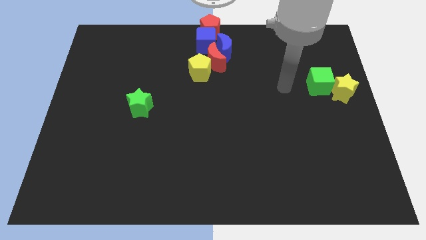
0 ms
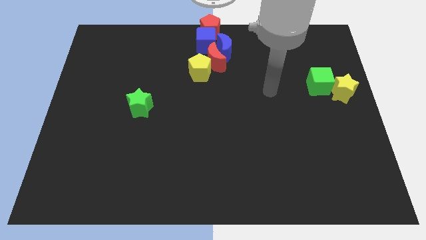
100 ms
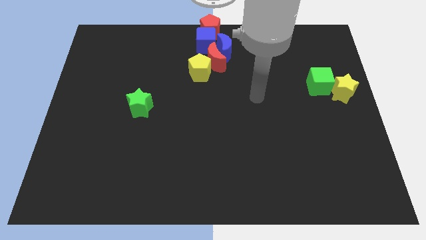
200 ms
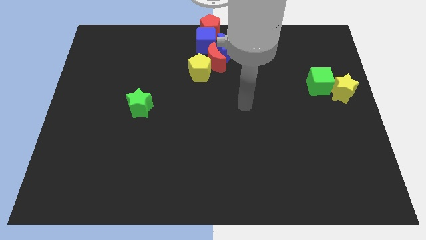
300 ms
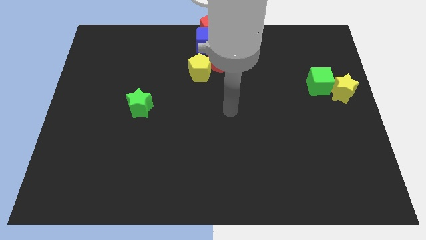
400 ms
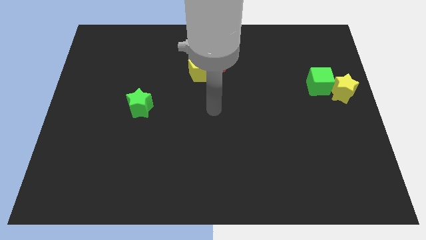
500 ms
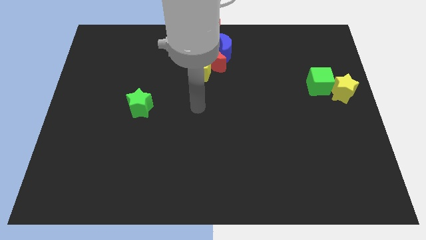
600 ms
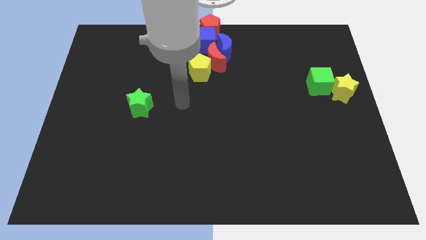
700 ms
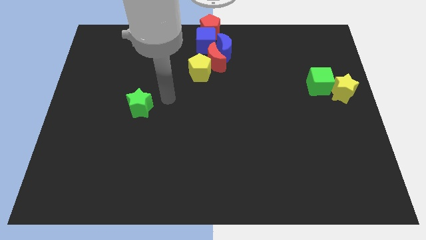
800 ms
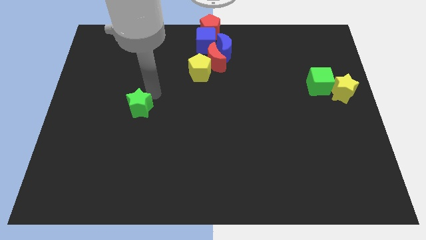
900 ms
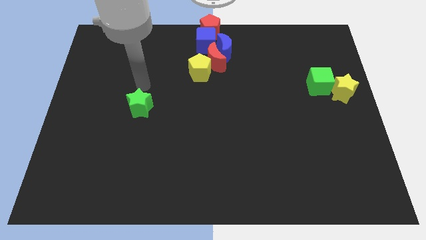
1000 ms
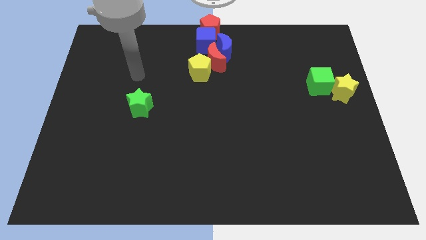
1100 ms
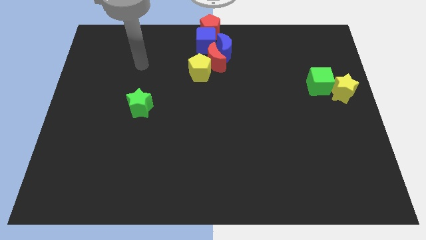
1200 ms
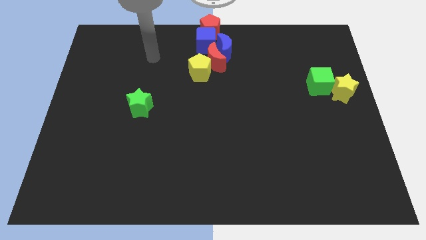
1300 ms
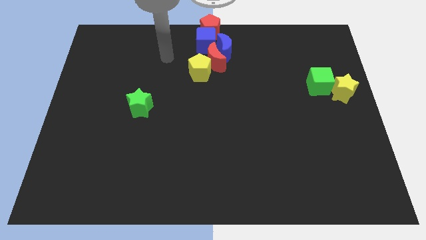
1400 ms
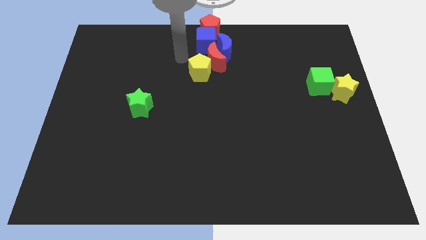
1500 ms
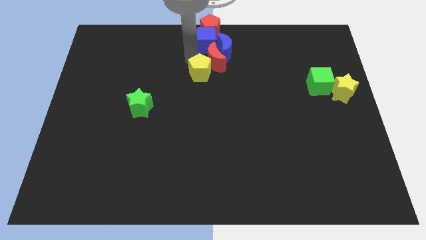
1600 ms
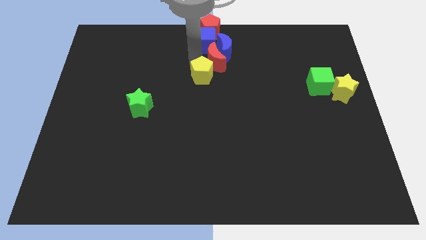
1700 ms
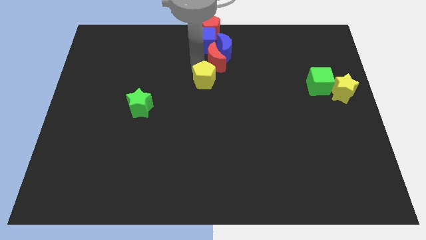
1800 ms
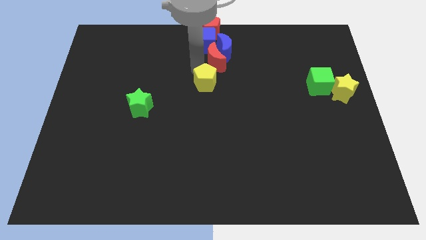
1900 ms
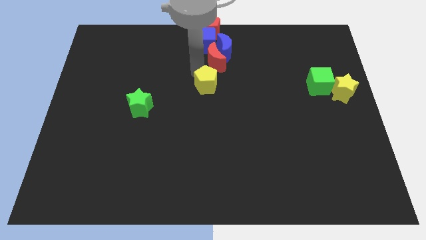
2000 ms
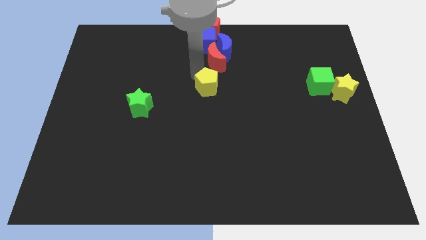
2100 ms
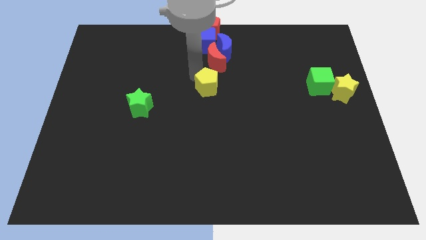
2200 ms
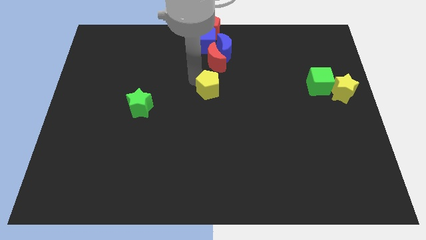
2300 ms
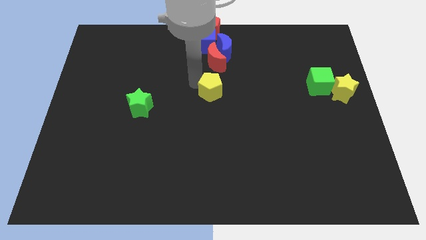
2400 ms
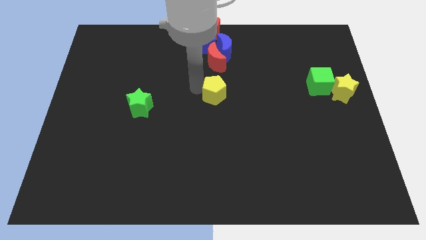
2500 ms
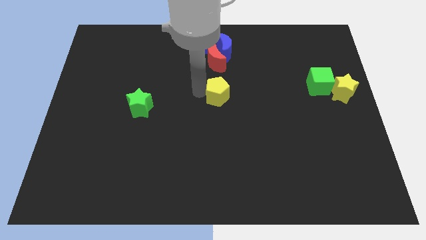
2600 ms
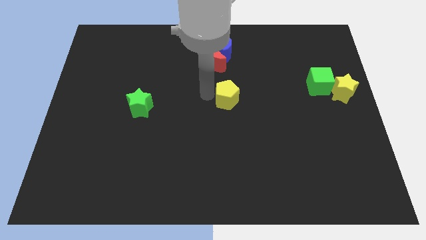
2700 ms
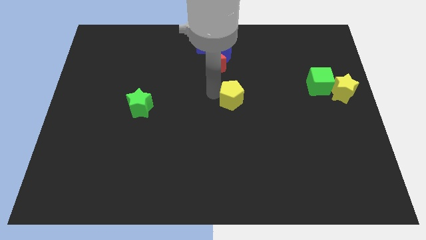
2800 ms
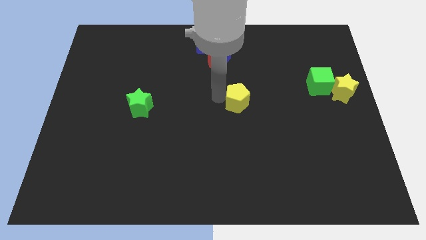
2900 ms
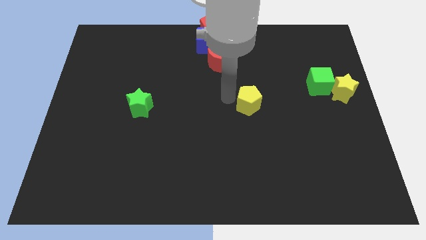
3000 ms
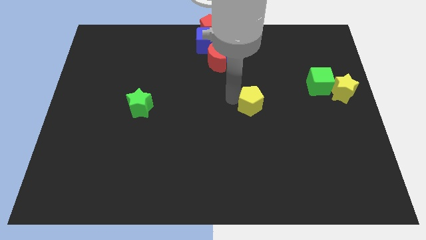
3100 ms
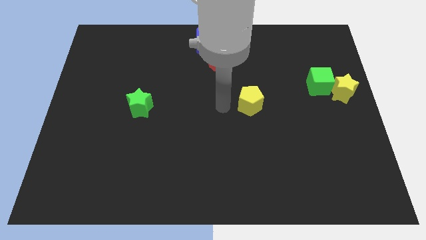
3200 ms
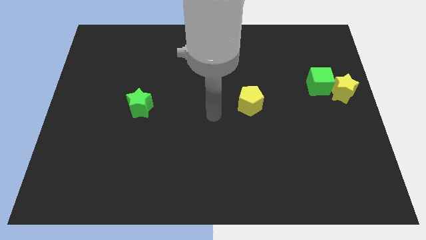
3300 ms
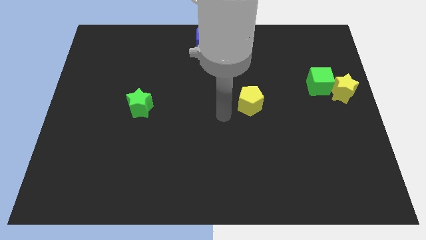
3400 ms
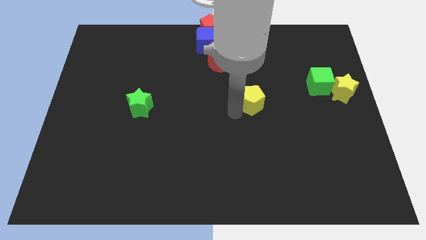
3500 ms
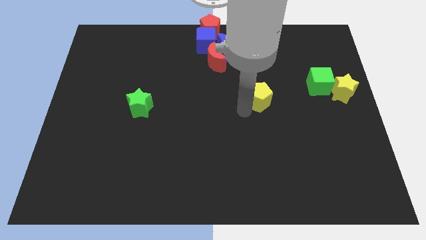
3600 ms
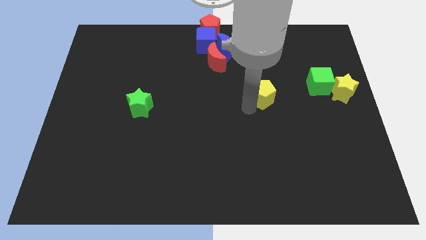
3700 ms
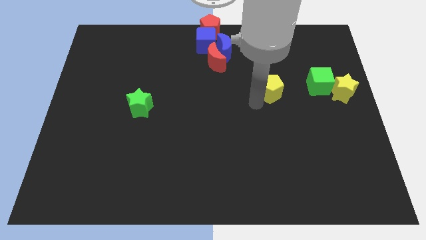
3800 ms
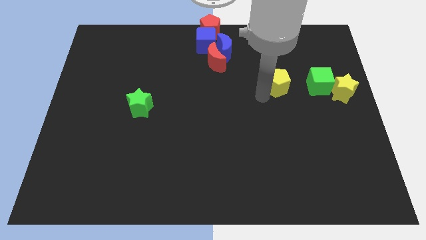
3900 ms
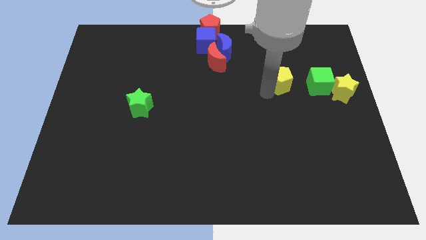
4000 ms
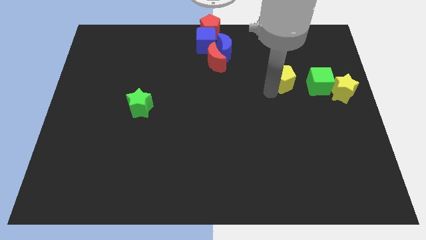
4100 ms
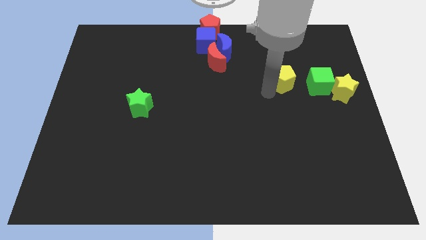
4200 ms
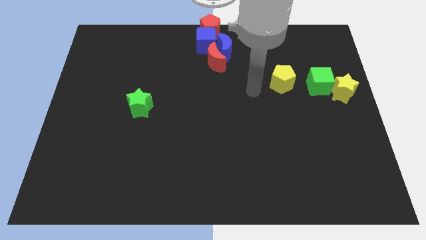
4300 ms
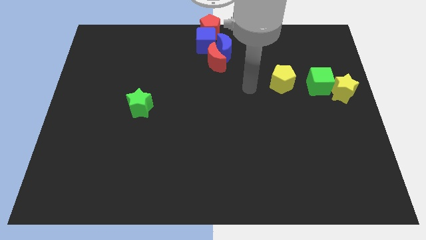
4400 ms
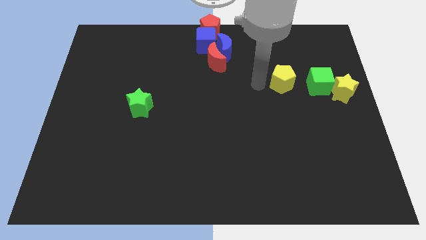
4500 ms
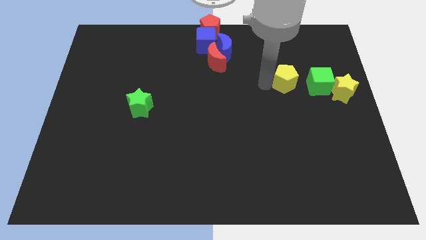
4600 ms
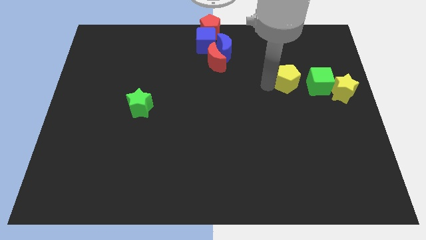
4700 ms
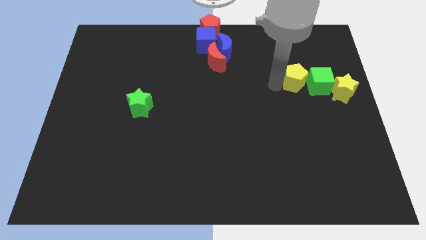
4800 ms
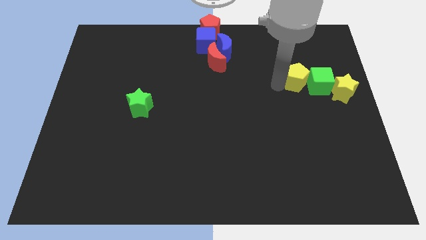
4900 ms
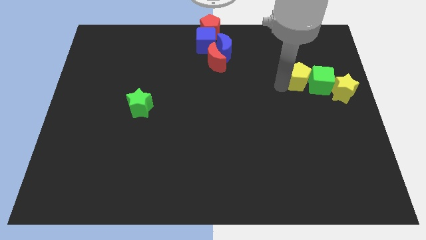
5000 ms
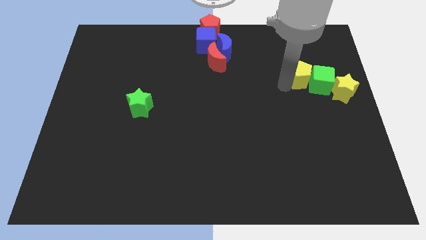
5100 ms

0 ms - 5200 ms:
push the yellow pentagon to the horizontal left of the green cube

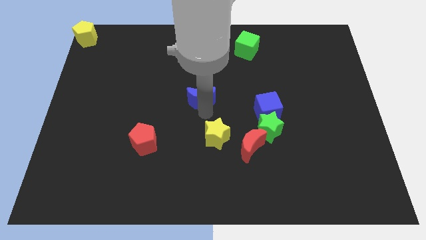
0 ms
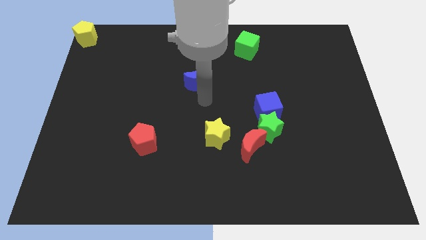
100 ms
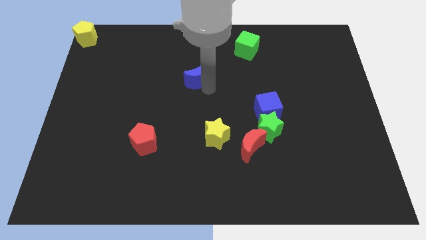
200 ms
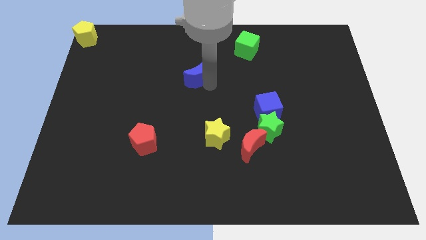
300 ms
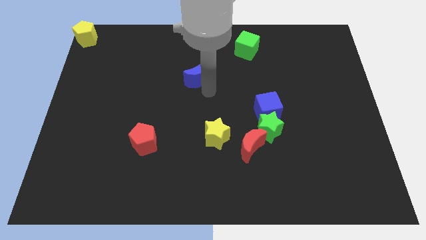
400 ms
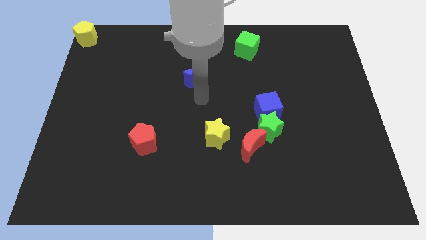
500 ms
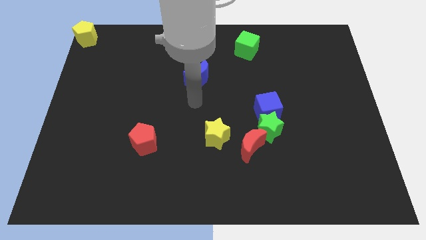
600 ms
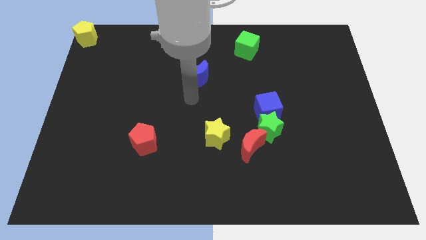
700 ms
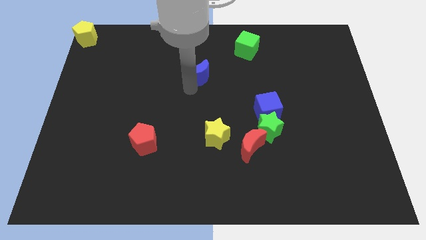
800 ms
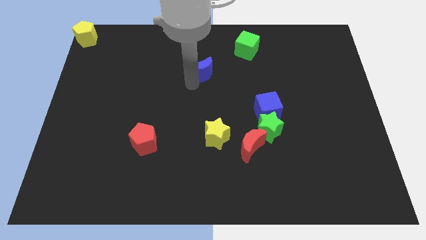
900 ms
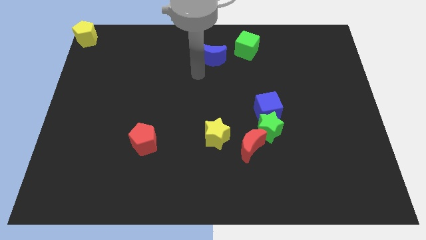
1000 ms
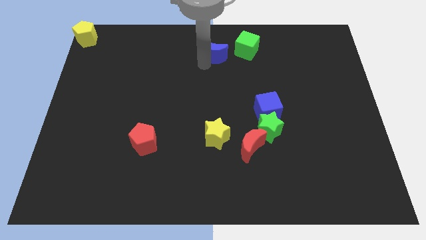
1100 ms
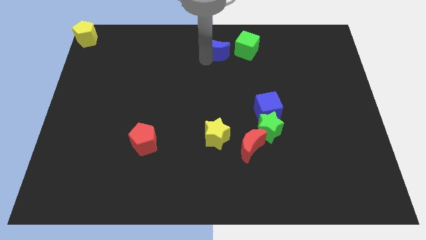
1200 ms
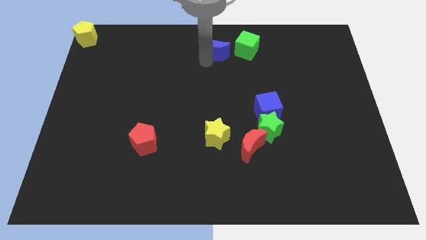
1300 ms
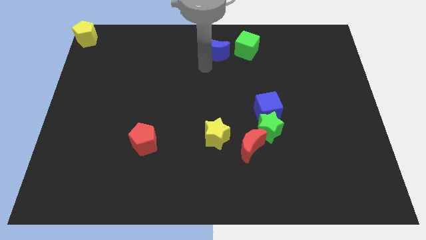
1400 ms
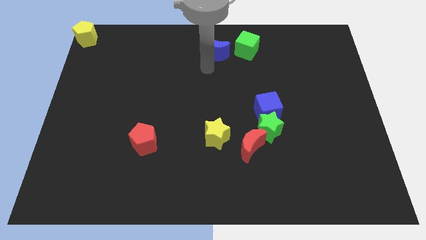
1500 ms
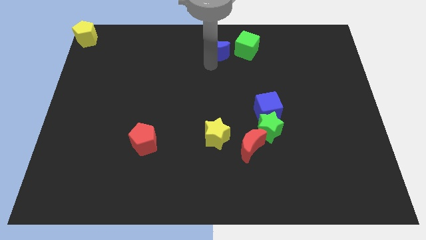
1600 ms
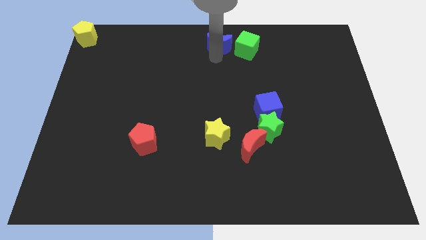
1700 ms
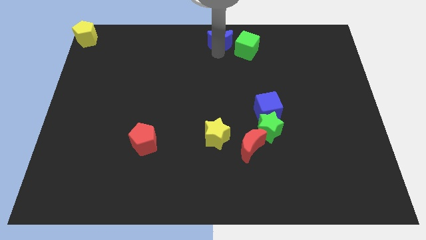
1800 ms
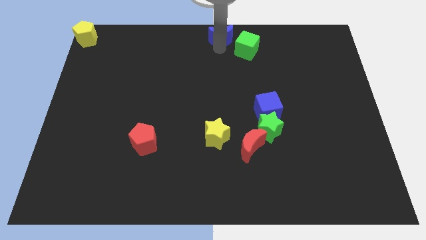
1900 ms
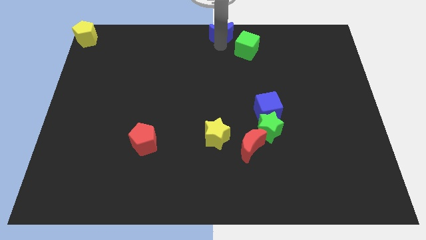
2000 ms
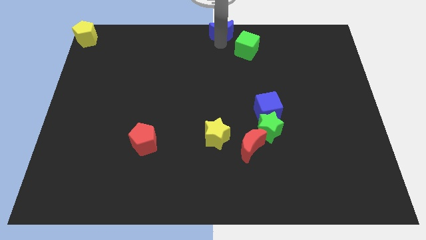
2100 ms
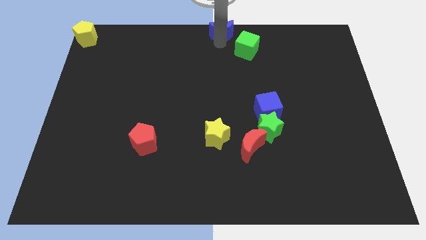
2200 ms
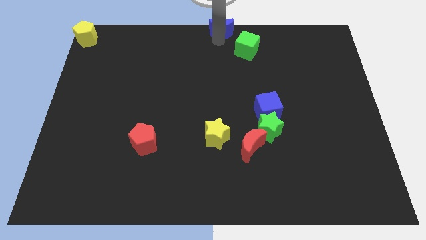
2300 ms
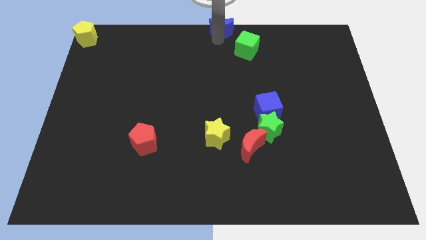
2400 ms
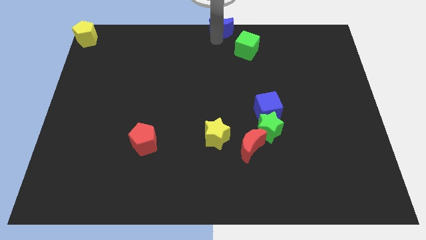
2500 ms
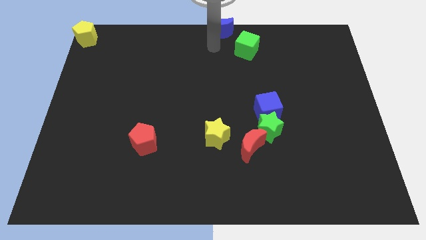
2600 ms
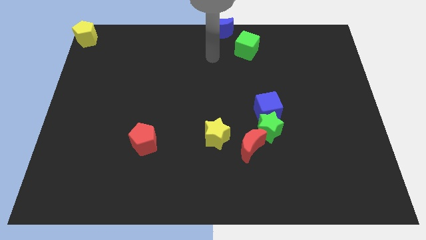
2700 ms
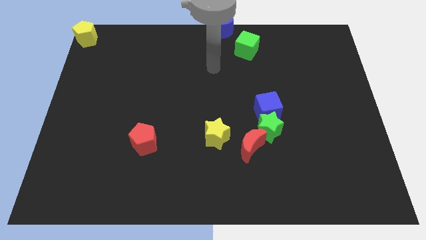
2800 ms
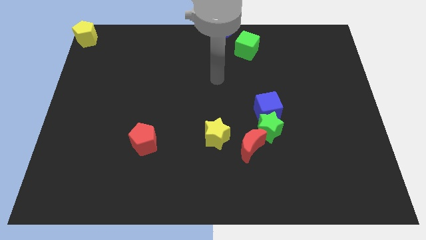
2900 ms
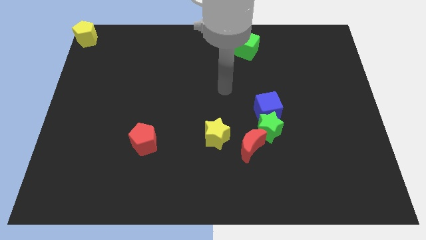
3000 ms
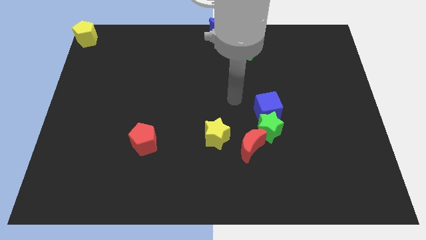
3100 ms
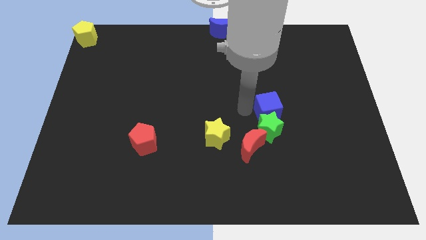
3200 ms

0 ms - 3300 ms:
move the blue cube to the top middle

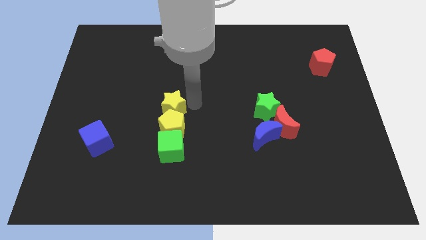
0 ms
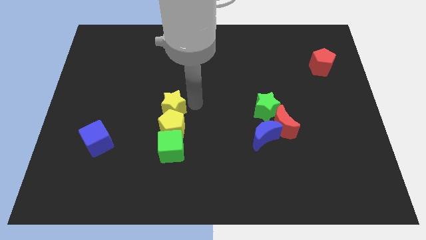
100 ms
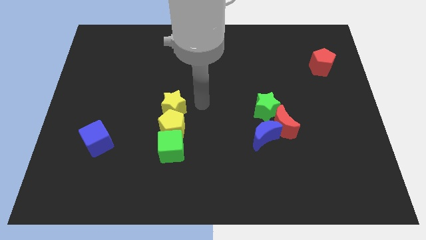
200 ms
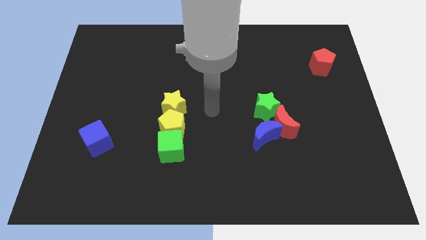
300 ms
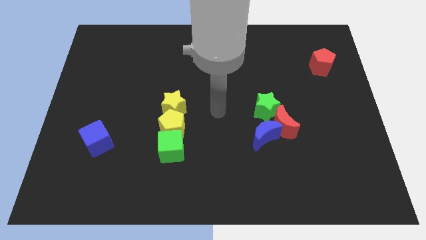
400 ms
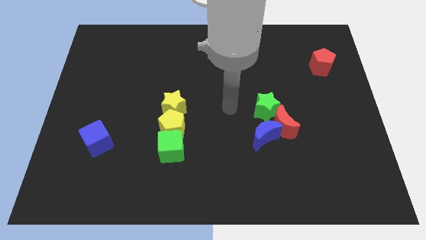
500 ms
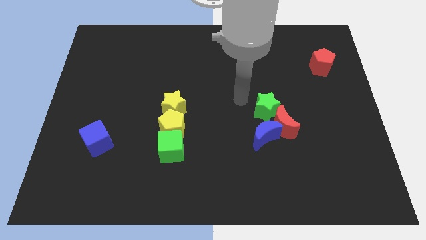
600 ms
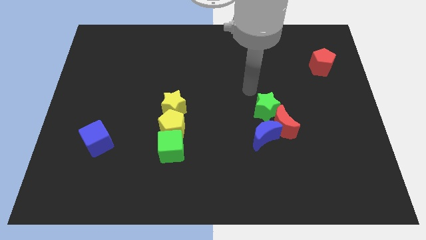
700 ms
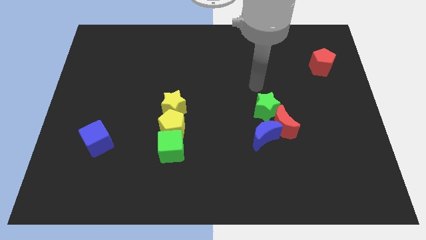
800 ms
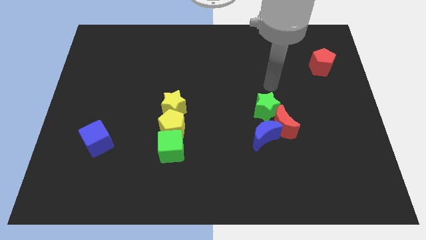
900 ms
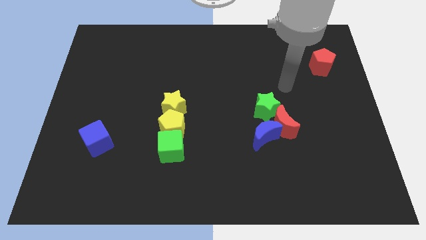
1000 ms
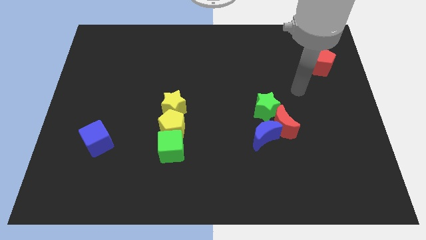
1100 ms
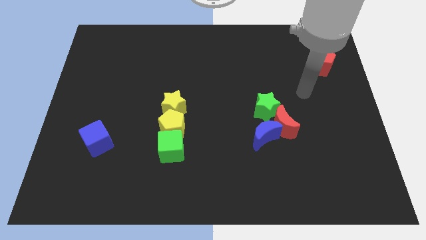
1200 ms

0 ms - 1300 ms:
place your hand in between the red pentagon and red crescent
